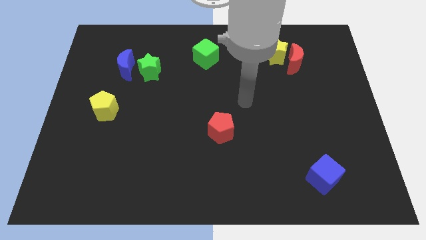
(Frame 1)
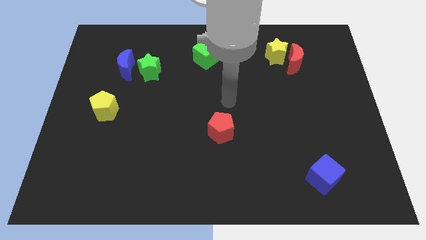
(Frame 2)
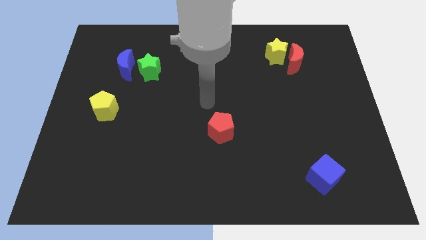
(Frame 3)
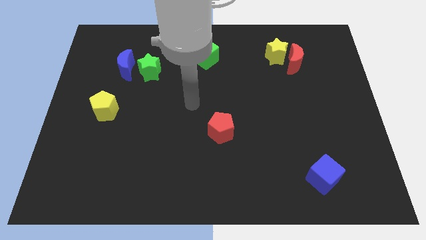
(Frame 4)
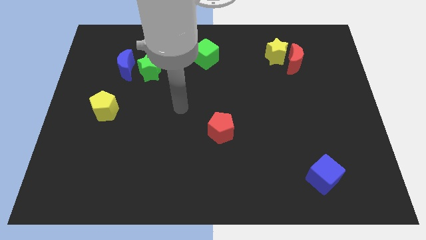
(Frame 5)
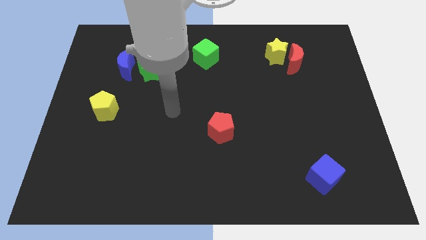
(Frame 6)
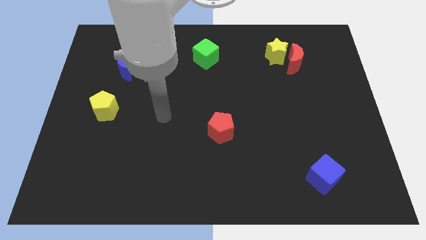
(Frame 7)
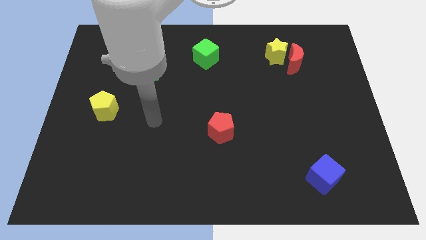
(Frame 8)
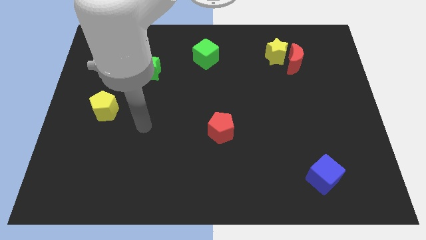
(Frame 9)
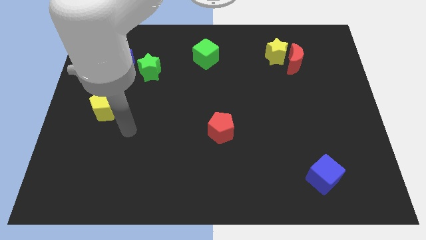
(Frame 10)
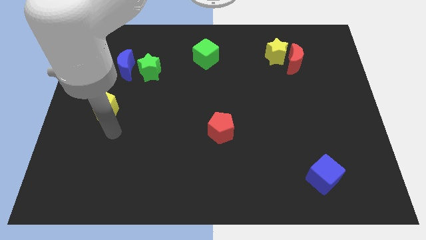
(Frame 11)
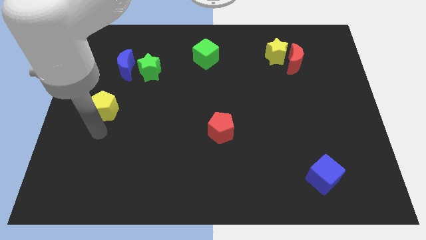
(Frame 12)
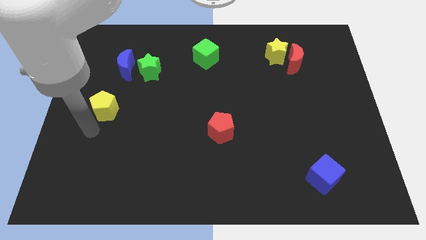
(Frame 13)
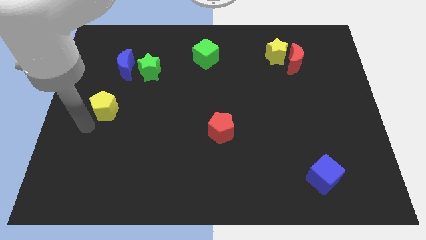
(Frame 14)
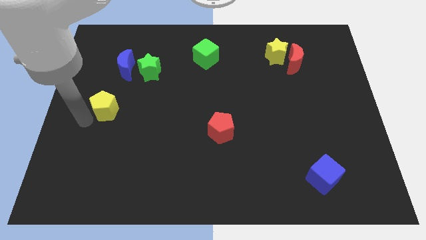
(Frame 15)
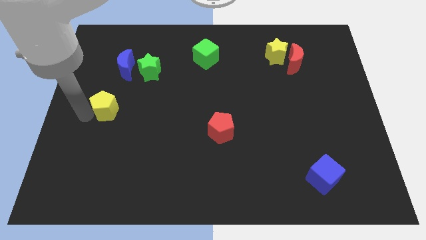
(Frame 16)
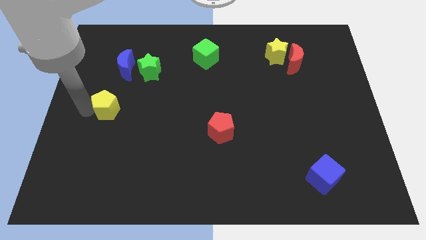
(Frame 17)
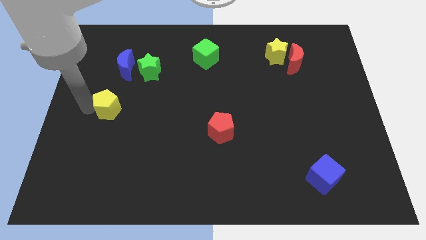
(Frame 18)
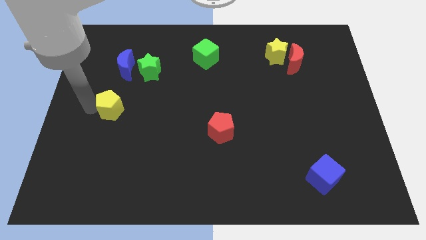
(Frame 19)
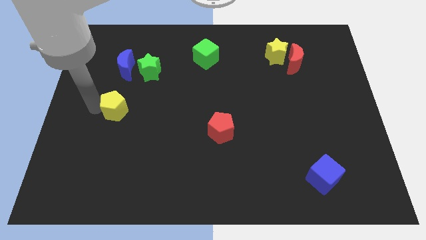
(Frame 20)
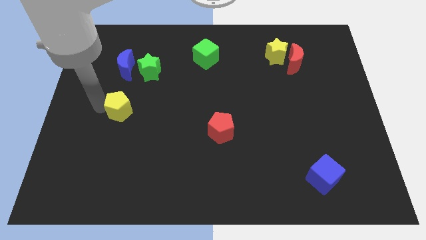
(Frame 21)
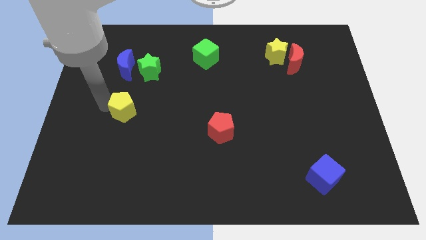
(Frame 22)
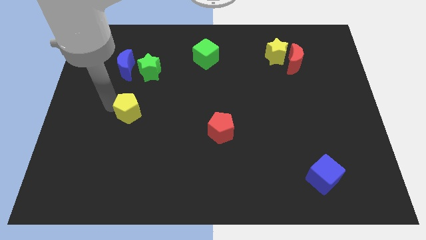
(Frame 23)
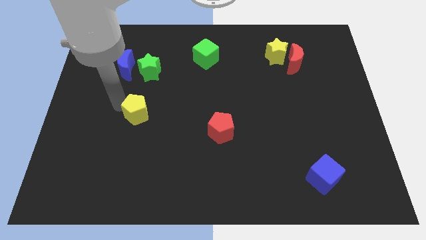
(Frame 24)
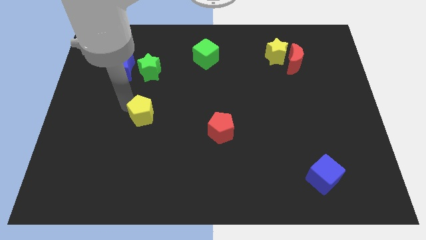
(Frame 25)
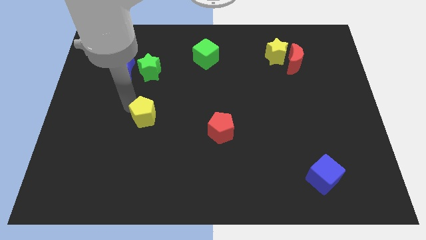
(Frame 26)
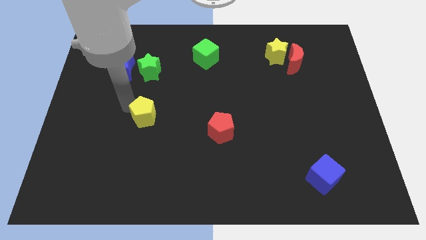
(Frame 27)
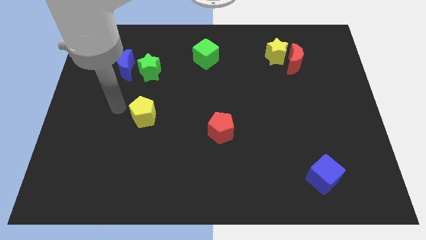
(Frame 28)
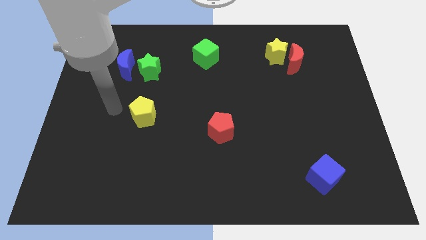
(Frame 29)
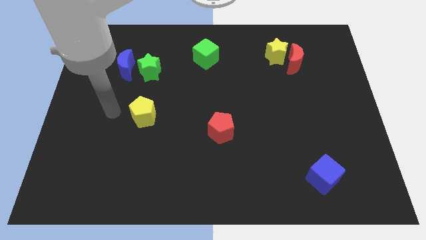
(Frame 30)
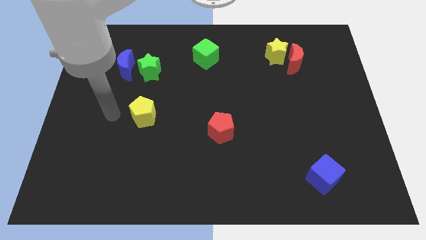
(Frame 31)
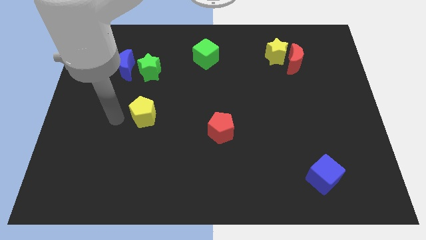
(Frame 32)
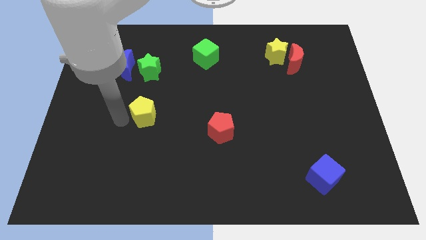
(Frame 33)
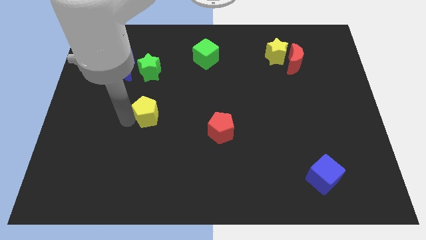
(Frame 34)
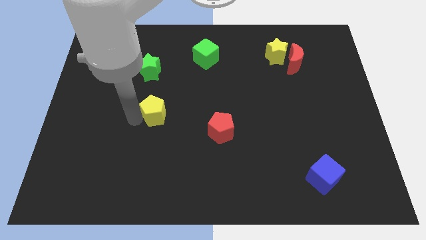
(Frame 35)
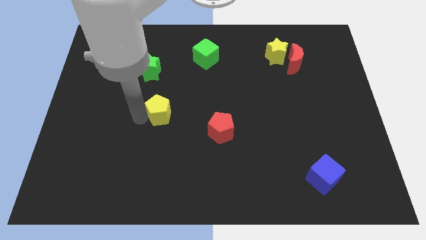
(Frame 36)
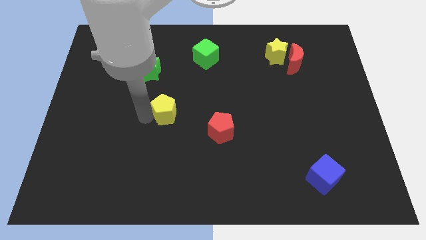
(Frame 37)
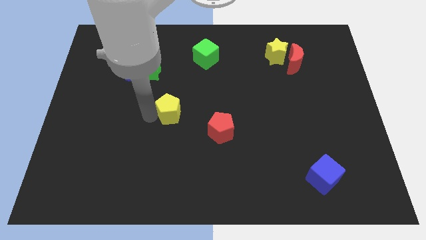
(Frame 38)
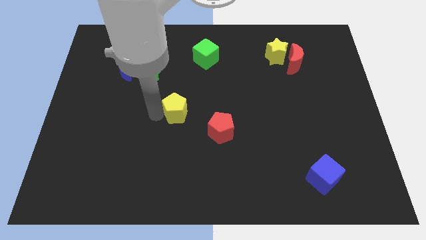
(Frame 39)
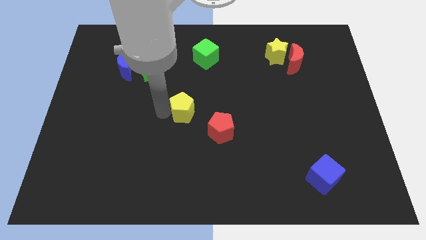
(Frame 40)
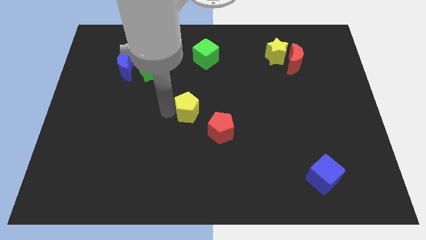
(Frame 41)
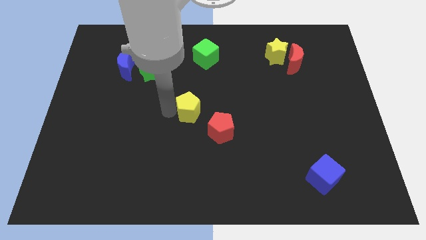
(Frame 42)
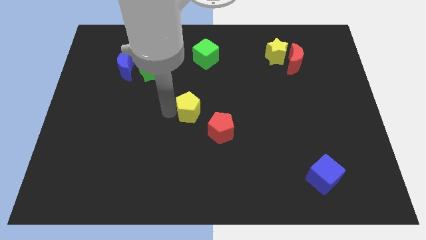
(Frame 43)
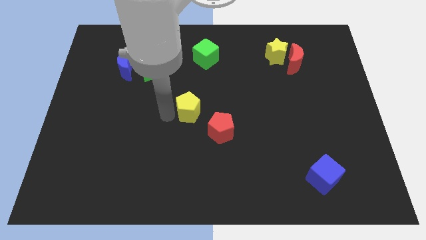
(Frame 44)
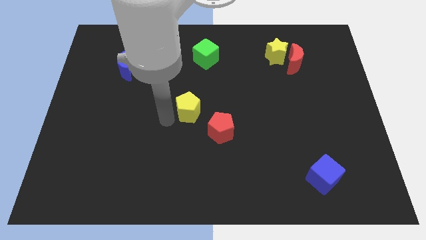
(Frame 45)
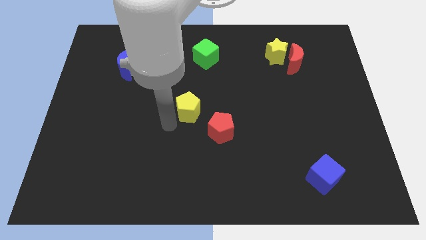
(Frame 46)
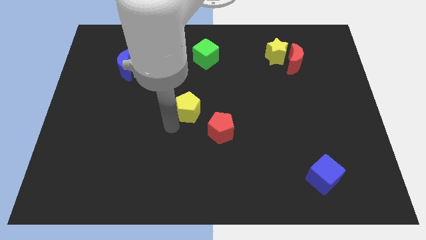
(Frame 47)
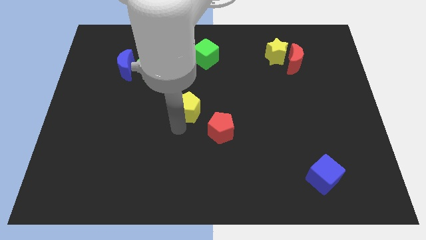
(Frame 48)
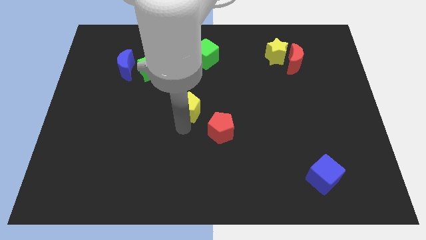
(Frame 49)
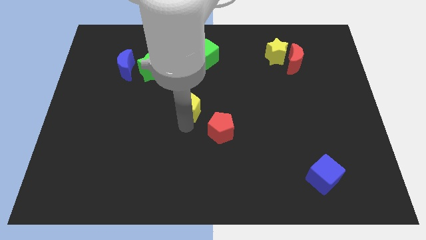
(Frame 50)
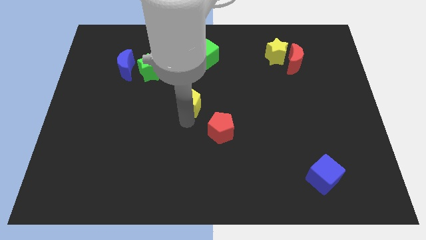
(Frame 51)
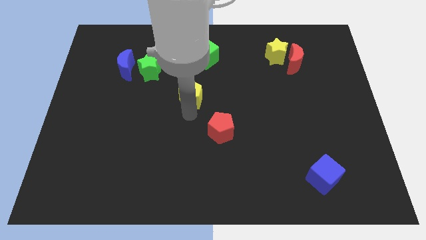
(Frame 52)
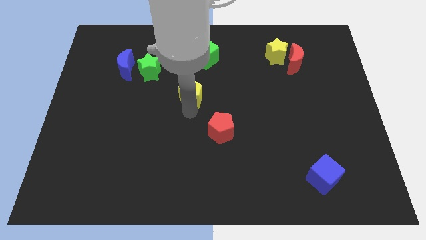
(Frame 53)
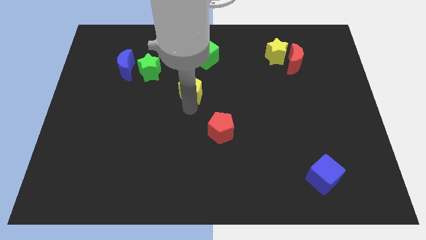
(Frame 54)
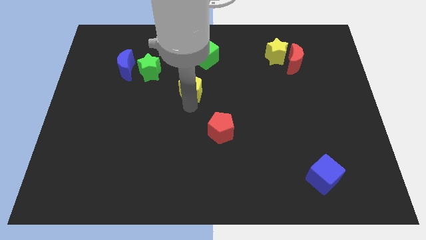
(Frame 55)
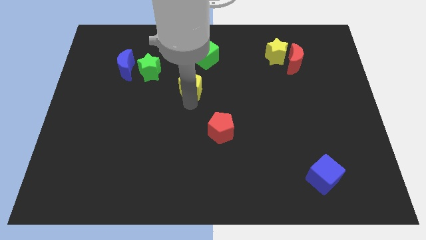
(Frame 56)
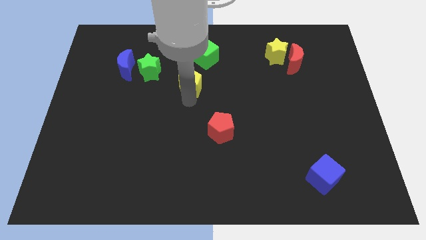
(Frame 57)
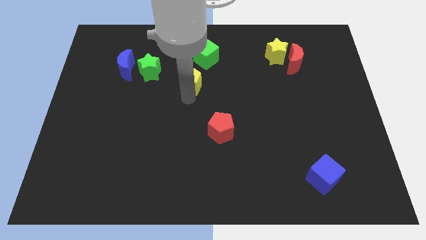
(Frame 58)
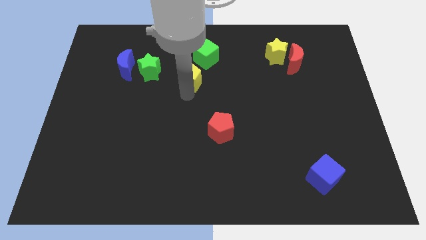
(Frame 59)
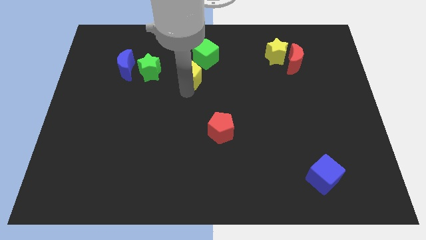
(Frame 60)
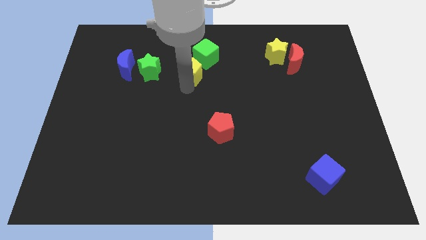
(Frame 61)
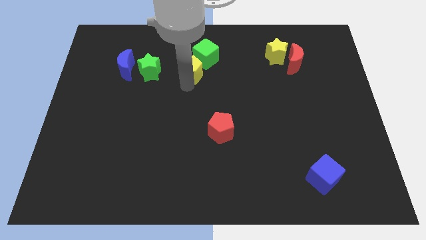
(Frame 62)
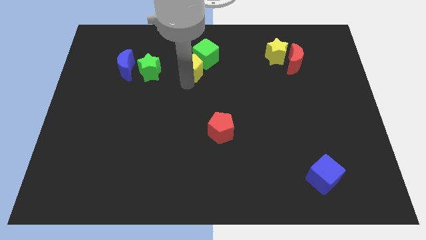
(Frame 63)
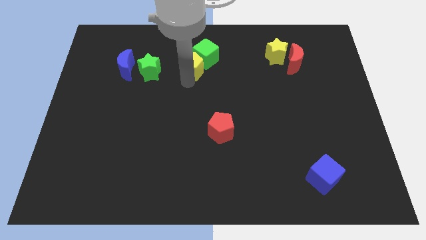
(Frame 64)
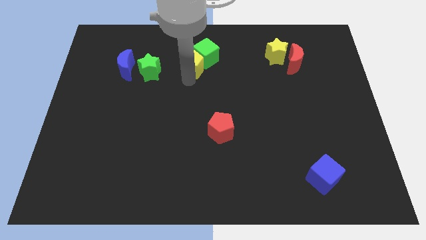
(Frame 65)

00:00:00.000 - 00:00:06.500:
move the yellow pentagon to the green cube

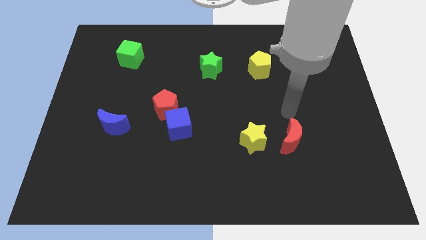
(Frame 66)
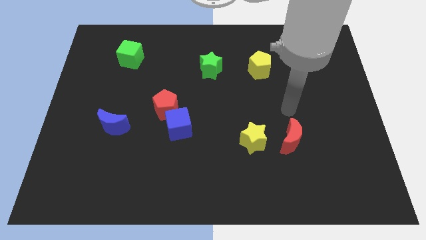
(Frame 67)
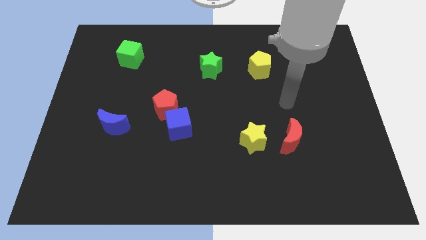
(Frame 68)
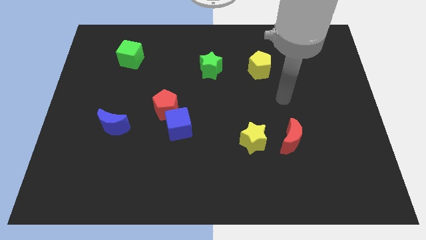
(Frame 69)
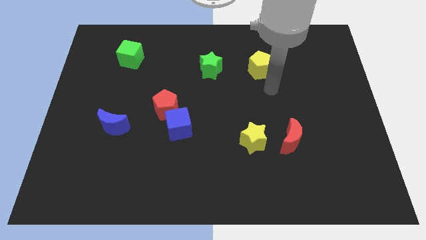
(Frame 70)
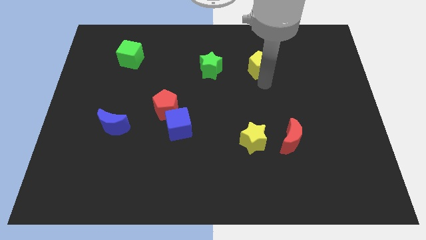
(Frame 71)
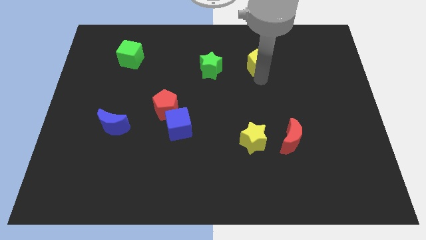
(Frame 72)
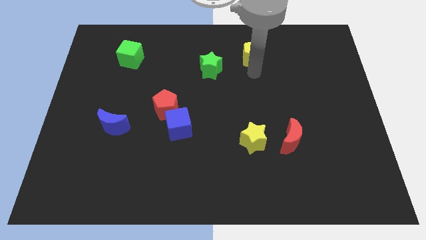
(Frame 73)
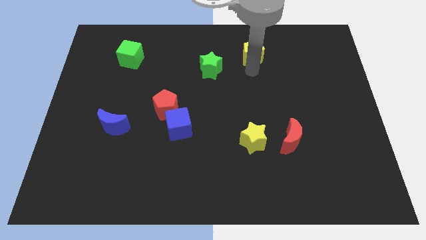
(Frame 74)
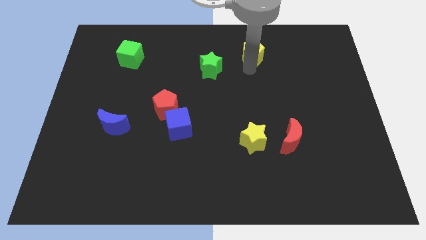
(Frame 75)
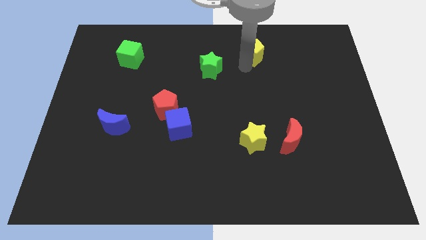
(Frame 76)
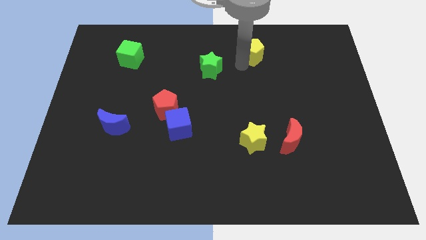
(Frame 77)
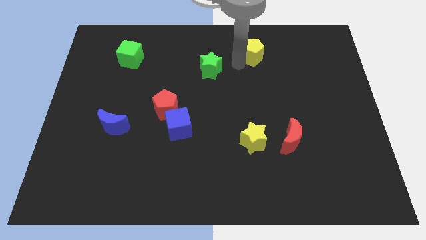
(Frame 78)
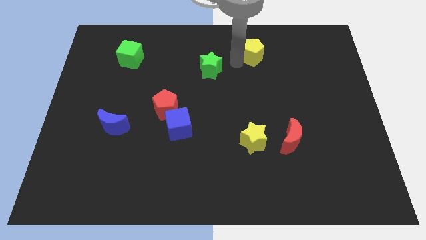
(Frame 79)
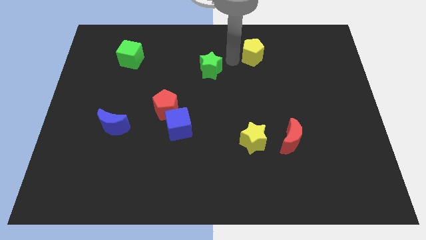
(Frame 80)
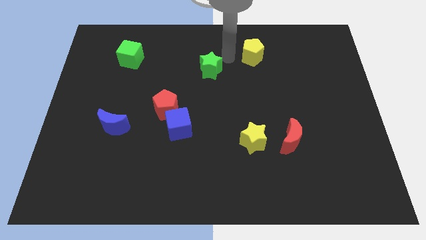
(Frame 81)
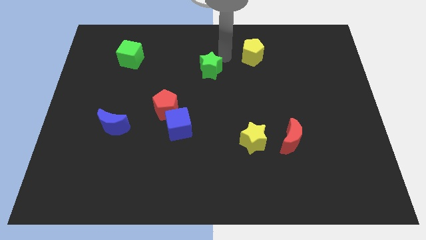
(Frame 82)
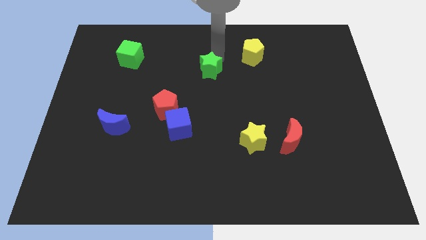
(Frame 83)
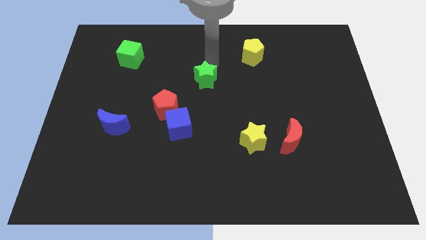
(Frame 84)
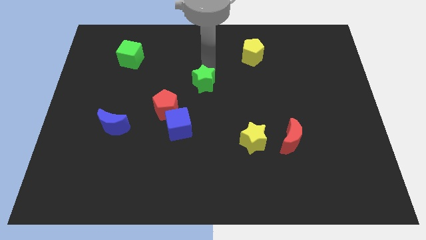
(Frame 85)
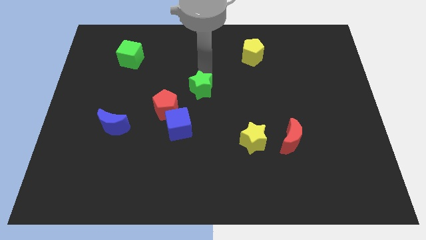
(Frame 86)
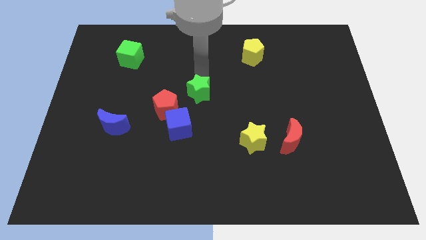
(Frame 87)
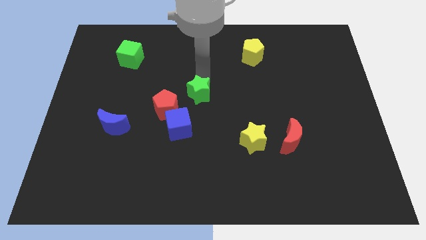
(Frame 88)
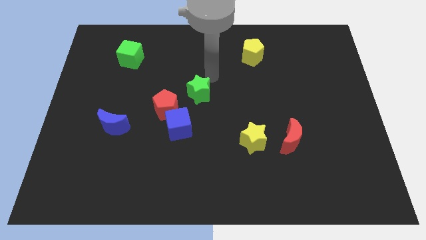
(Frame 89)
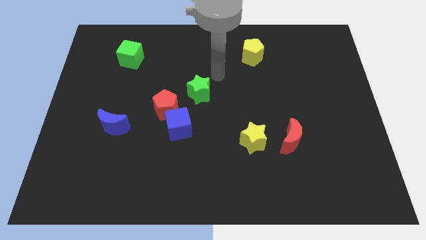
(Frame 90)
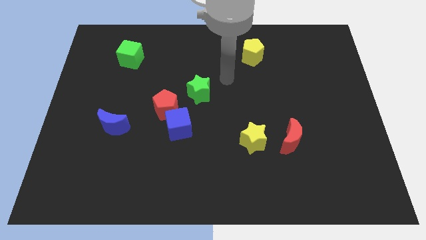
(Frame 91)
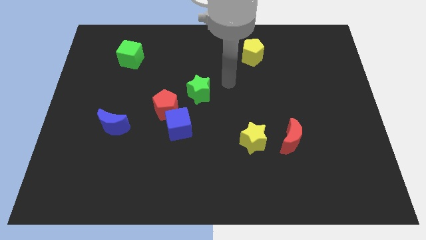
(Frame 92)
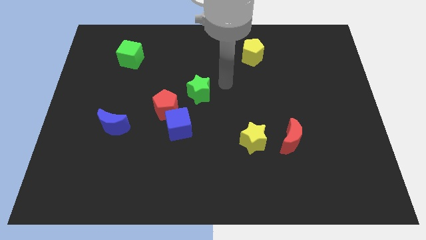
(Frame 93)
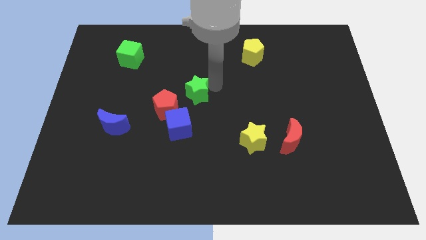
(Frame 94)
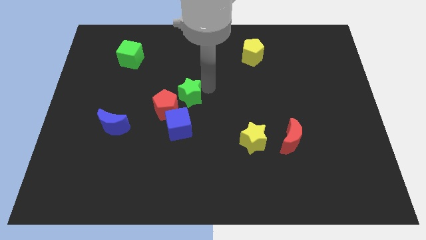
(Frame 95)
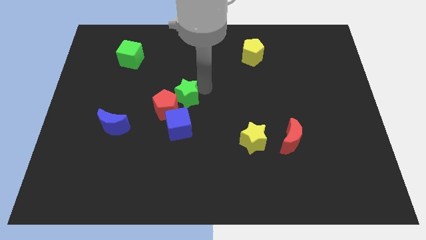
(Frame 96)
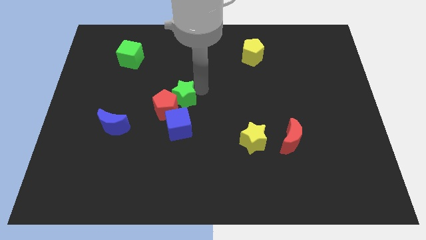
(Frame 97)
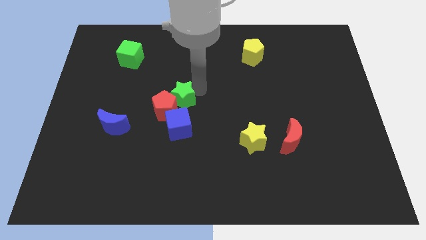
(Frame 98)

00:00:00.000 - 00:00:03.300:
move the green star close to the red pentagon
